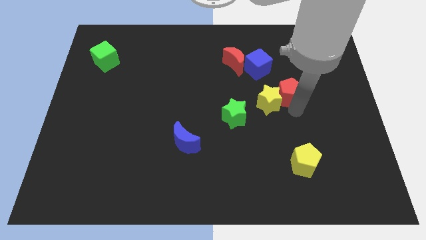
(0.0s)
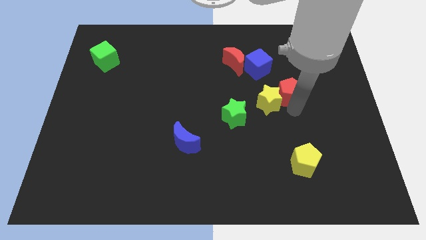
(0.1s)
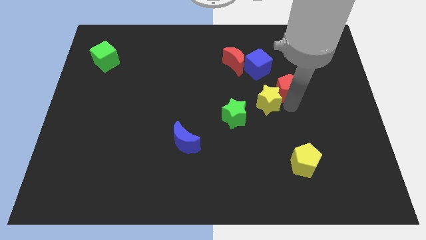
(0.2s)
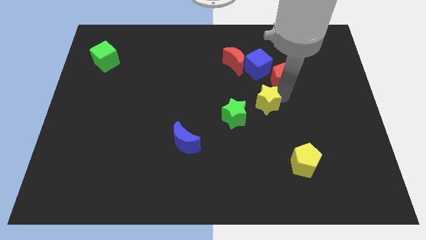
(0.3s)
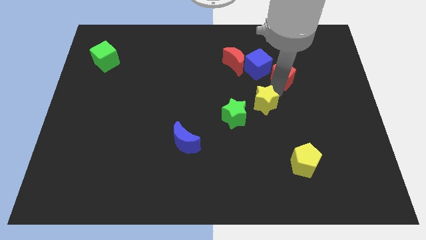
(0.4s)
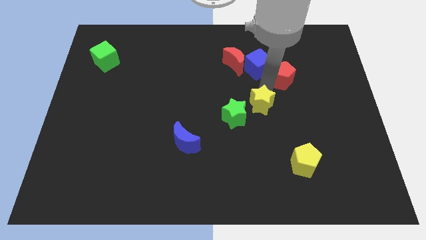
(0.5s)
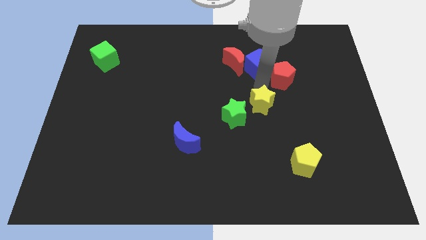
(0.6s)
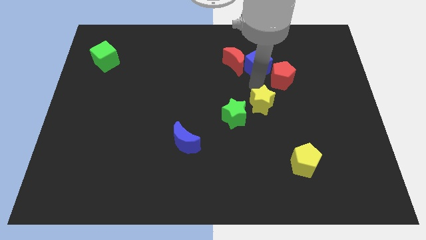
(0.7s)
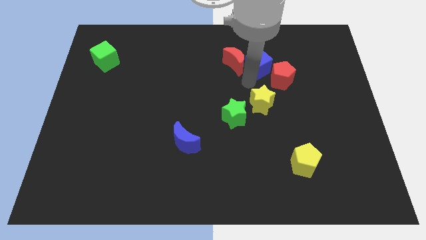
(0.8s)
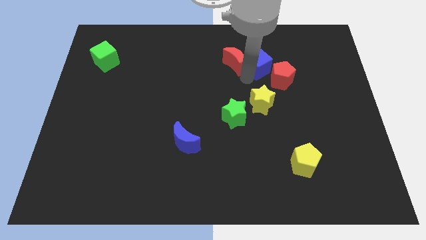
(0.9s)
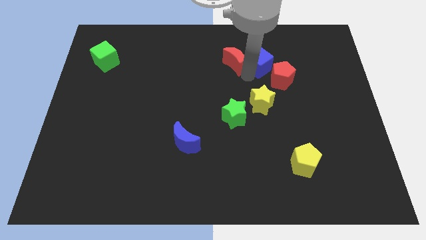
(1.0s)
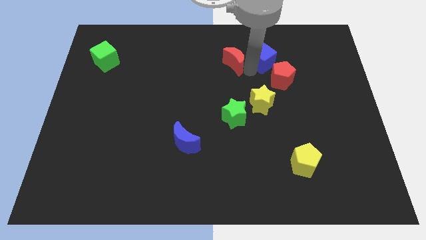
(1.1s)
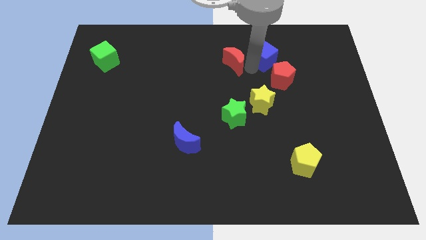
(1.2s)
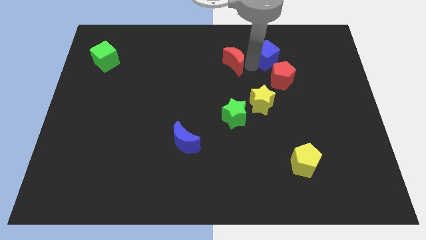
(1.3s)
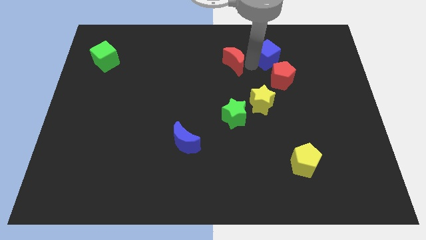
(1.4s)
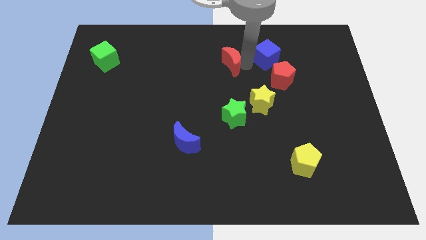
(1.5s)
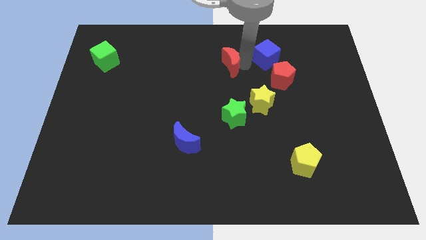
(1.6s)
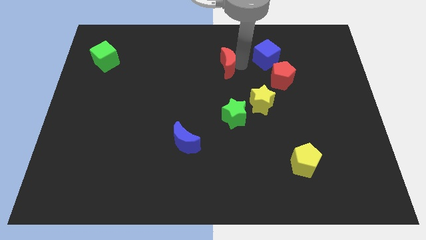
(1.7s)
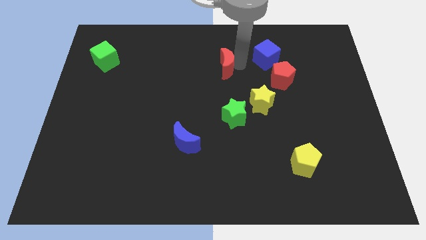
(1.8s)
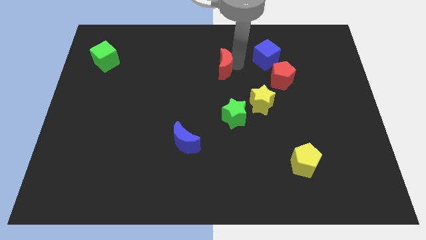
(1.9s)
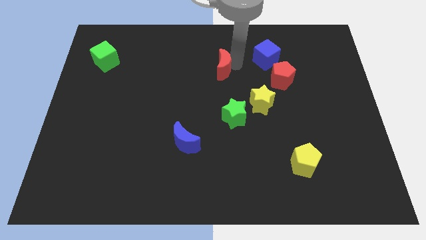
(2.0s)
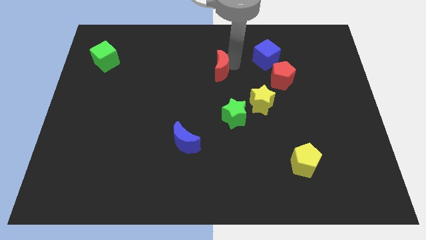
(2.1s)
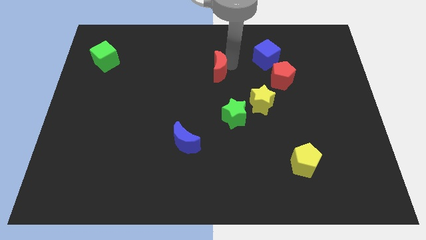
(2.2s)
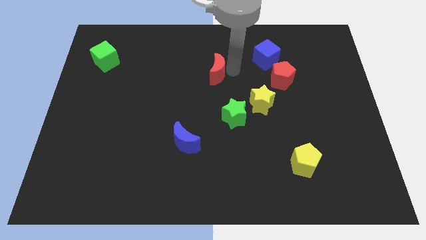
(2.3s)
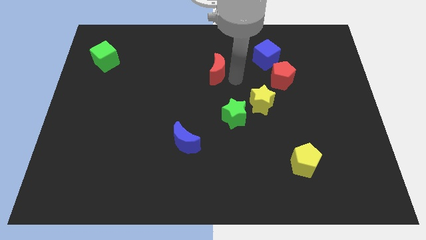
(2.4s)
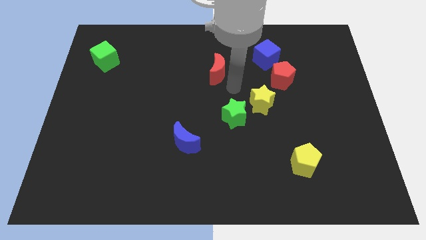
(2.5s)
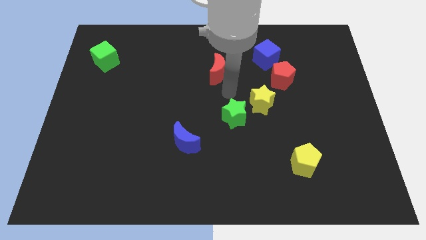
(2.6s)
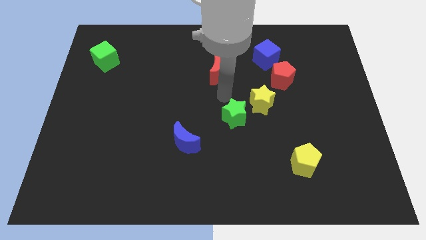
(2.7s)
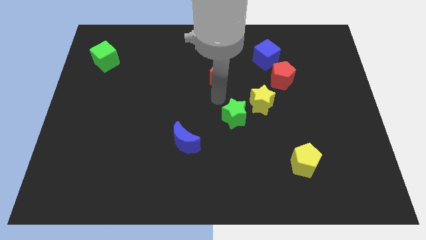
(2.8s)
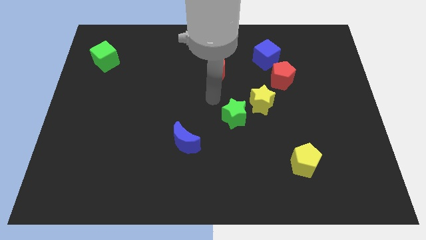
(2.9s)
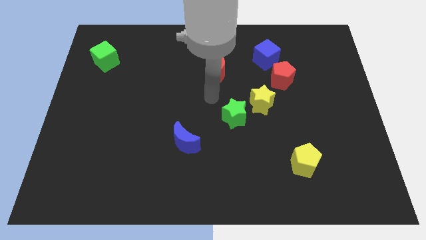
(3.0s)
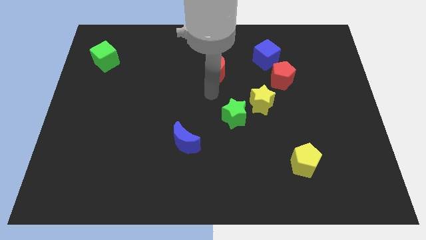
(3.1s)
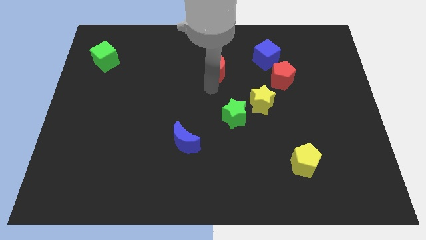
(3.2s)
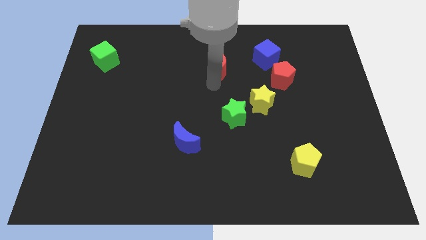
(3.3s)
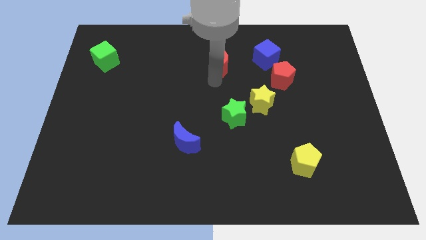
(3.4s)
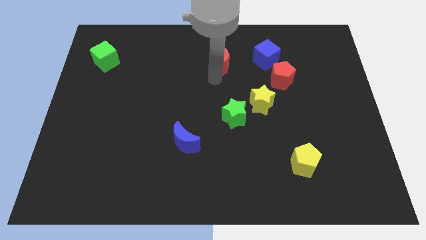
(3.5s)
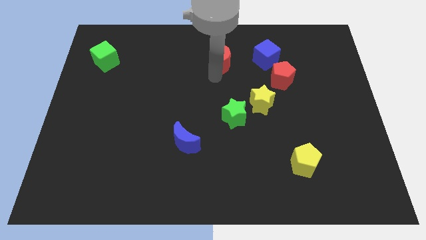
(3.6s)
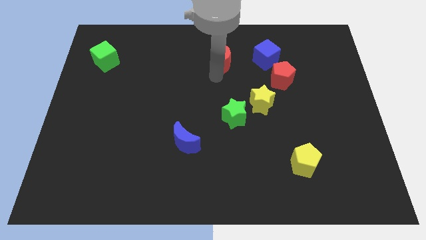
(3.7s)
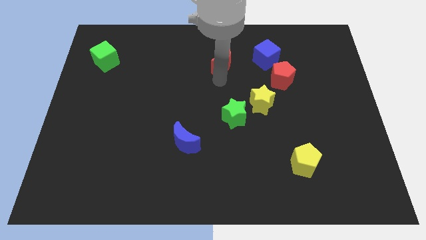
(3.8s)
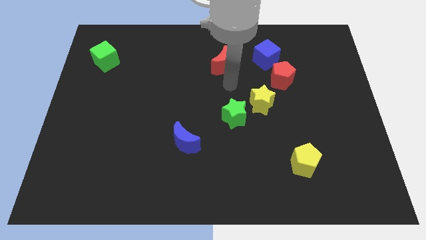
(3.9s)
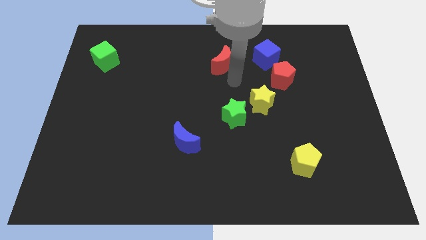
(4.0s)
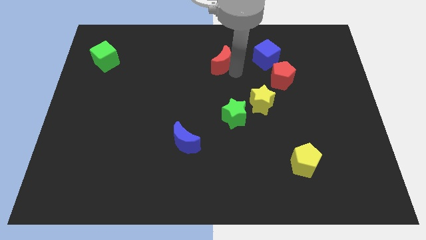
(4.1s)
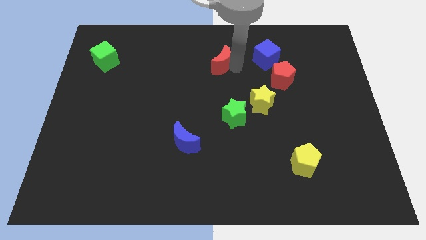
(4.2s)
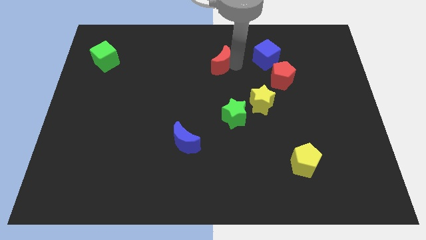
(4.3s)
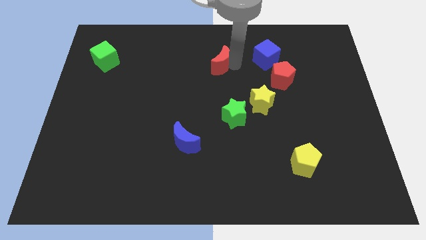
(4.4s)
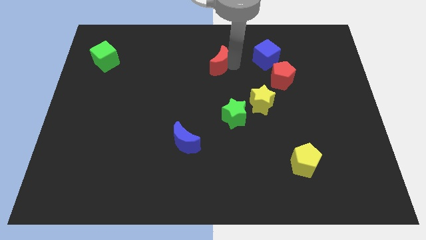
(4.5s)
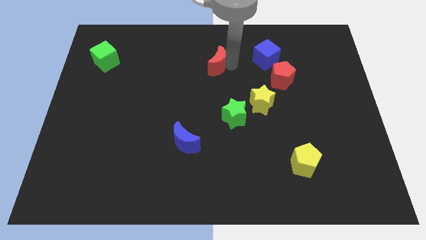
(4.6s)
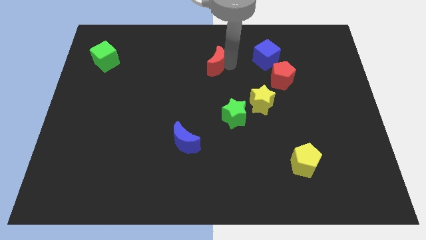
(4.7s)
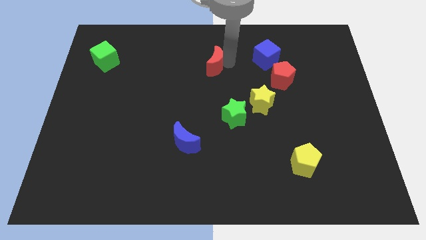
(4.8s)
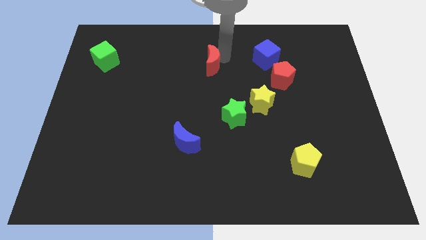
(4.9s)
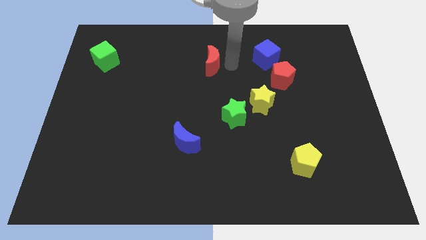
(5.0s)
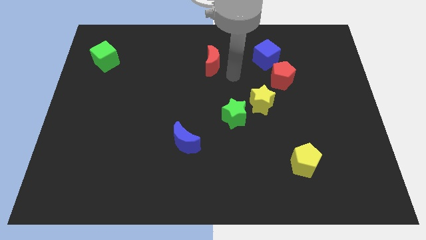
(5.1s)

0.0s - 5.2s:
place the red moon at the top of the green star

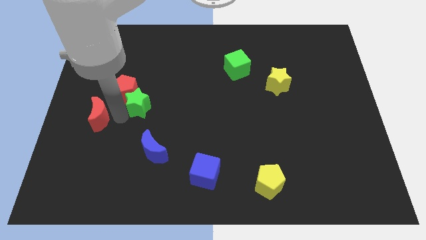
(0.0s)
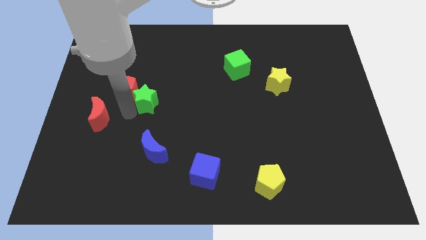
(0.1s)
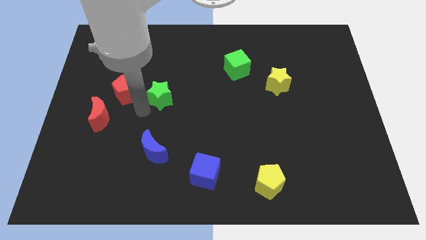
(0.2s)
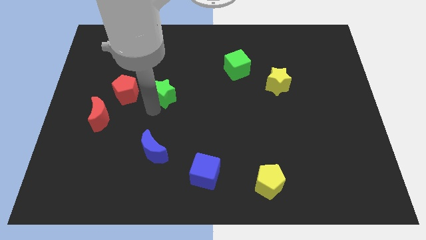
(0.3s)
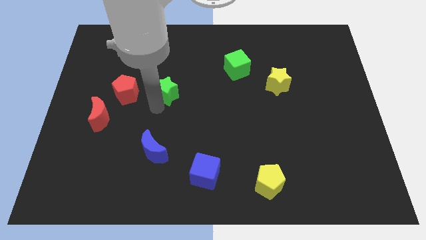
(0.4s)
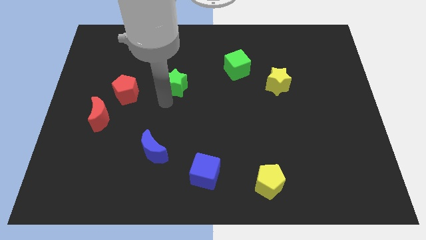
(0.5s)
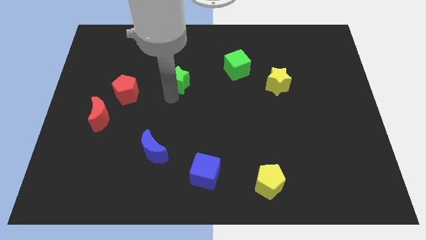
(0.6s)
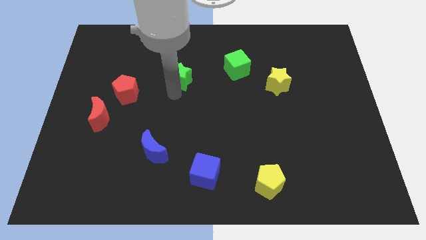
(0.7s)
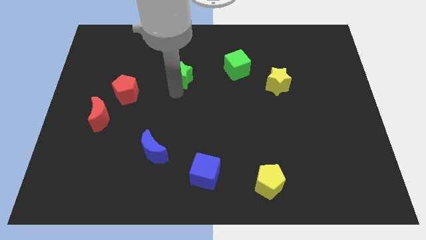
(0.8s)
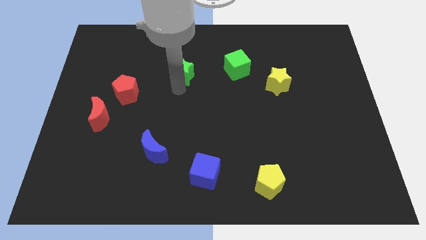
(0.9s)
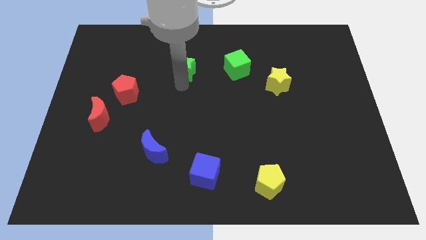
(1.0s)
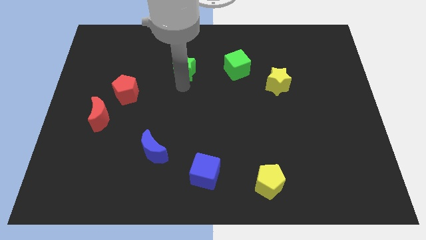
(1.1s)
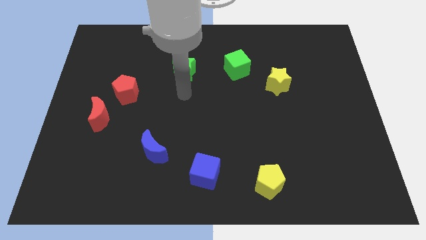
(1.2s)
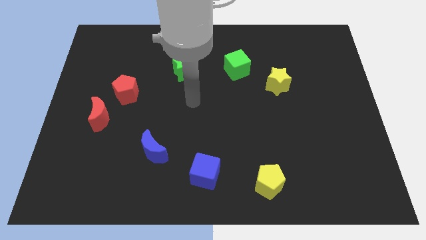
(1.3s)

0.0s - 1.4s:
move the green star to the left of the green cube

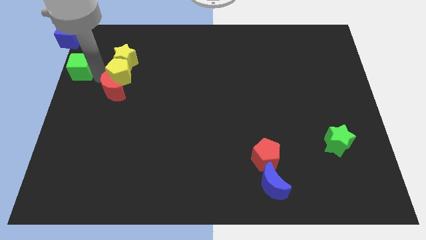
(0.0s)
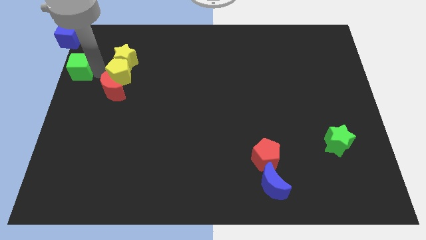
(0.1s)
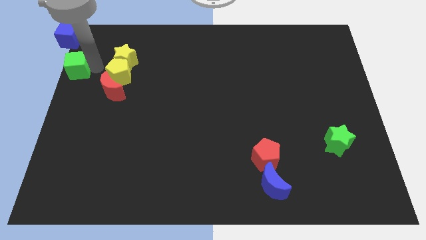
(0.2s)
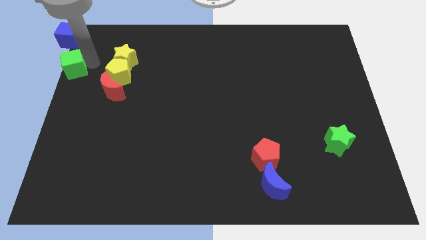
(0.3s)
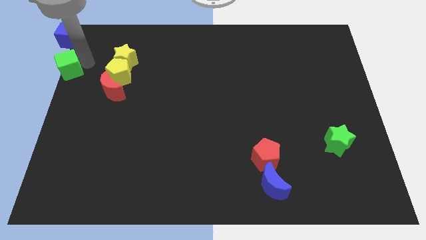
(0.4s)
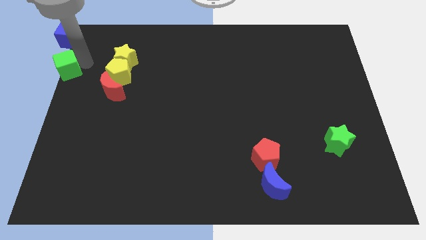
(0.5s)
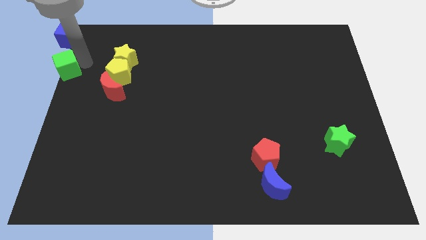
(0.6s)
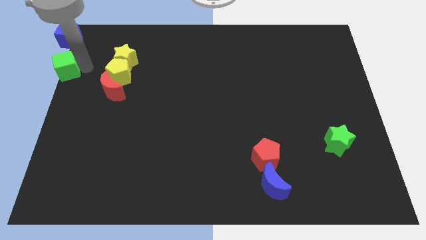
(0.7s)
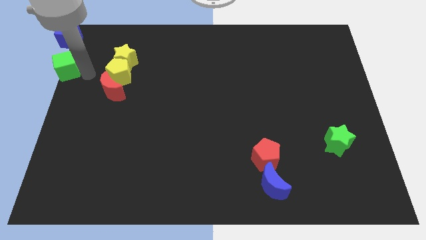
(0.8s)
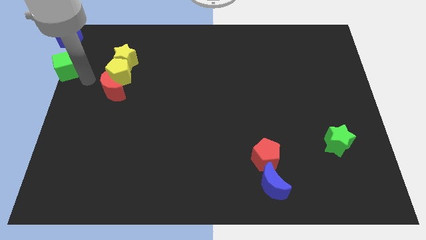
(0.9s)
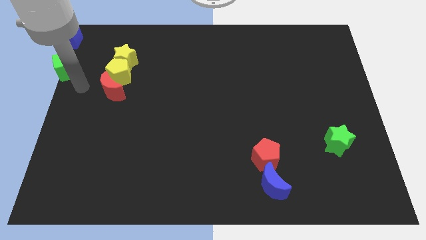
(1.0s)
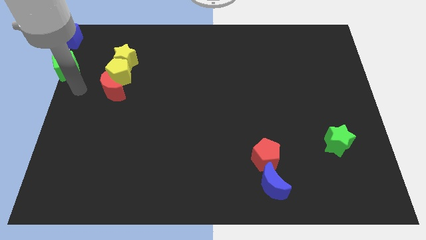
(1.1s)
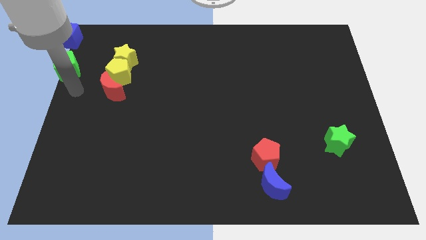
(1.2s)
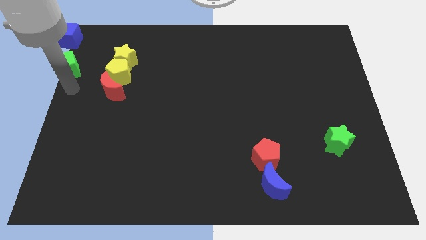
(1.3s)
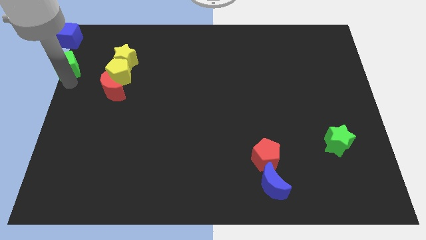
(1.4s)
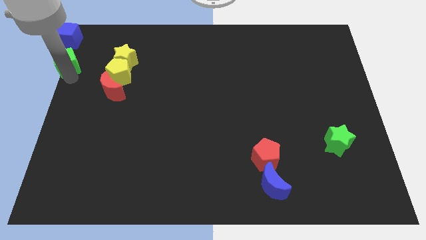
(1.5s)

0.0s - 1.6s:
push the green cube on the bottom side of the blue cube

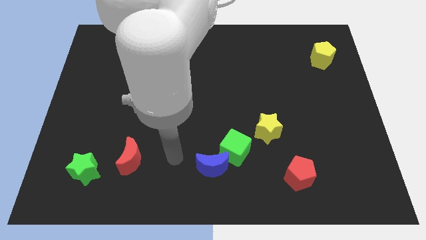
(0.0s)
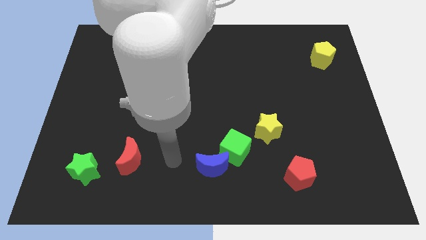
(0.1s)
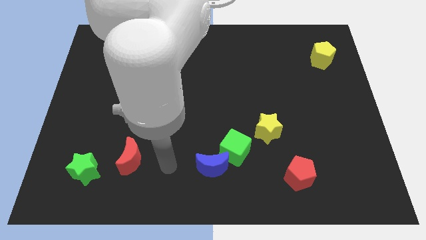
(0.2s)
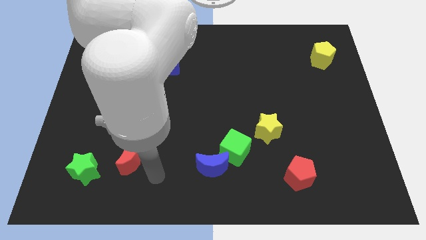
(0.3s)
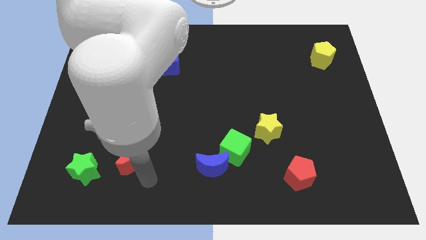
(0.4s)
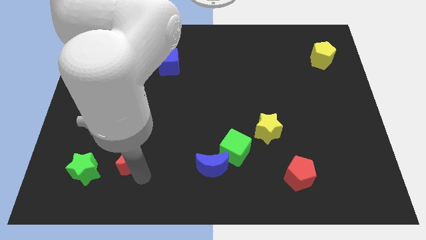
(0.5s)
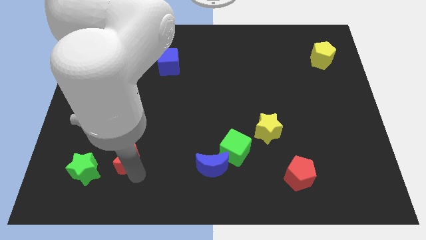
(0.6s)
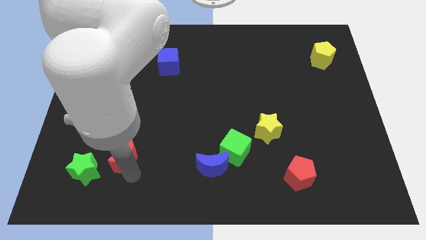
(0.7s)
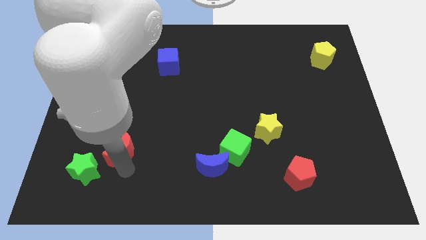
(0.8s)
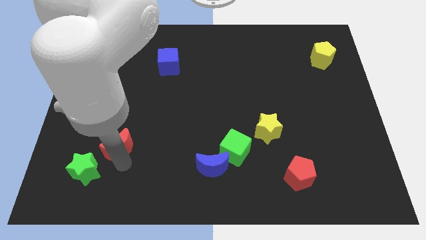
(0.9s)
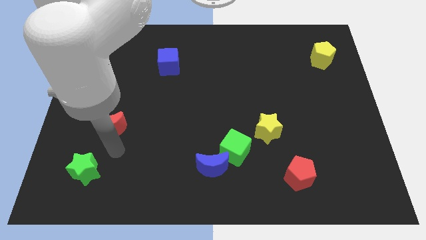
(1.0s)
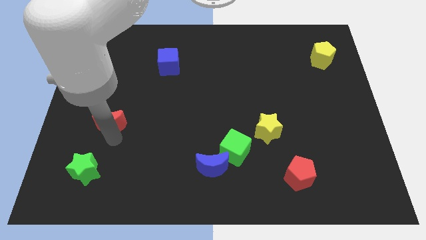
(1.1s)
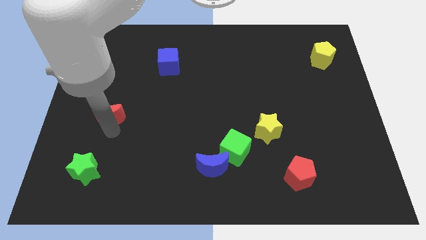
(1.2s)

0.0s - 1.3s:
push the red crescent to the top of the board
